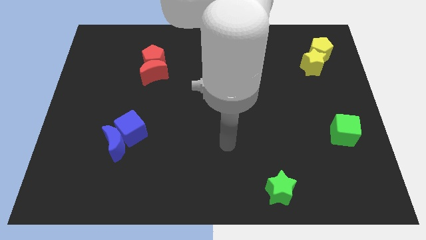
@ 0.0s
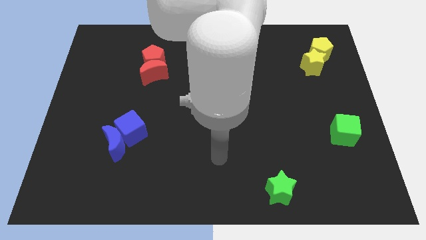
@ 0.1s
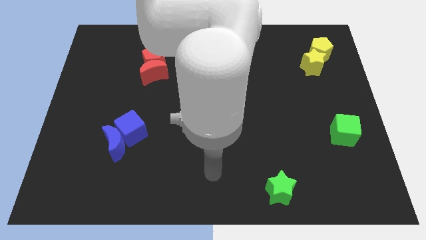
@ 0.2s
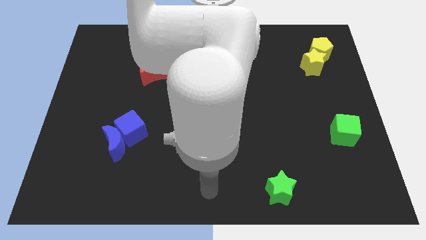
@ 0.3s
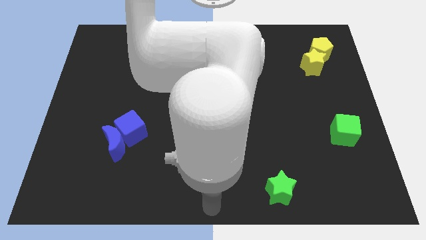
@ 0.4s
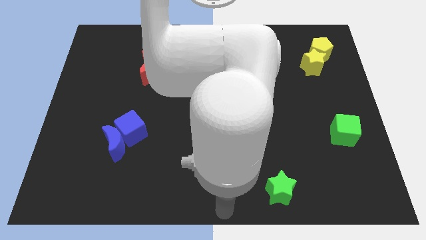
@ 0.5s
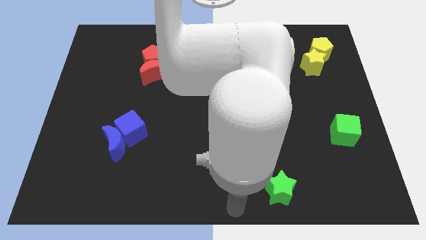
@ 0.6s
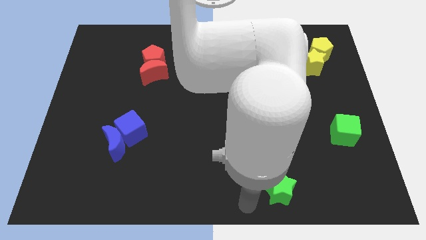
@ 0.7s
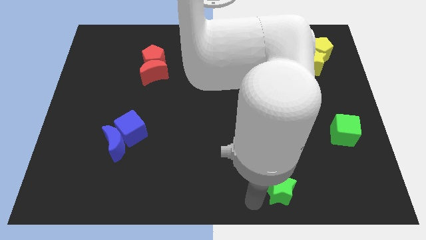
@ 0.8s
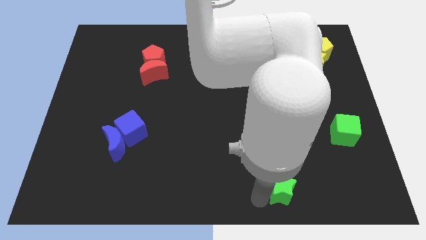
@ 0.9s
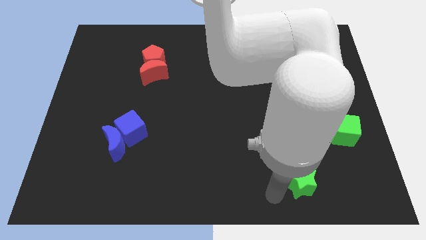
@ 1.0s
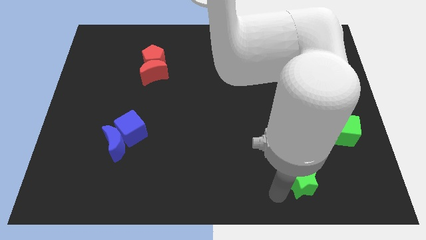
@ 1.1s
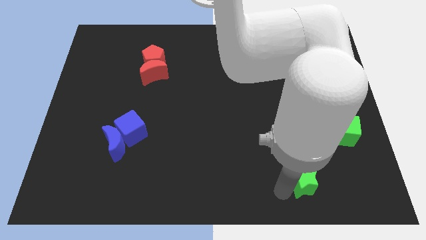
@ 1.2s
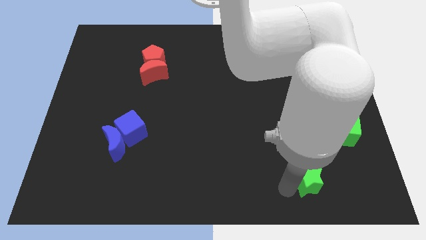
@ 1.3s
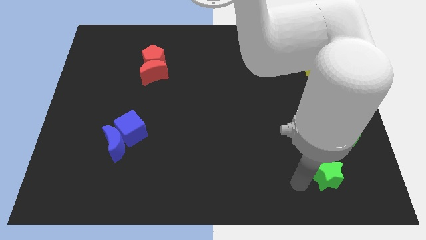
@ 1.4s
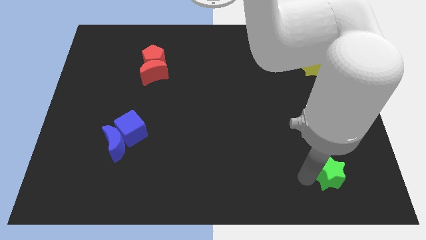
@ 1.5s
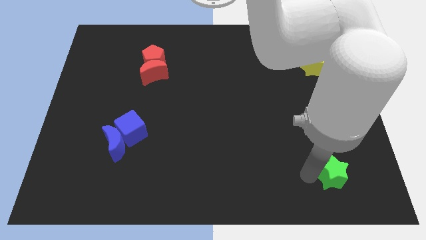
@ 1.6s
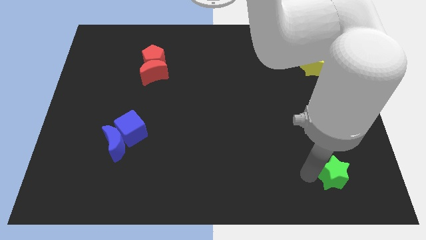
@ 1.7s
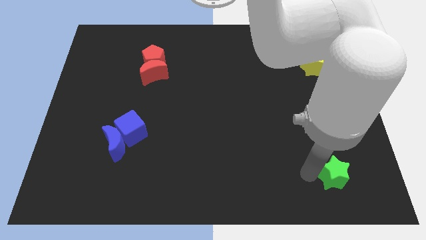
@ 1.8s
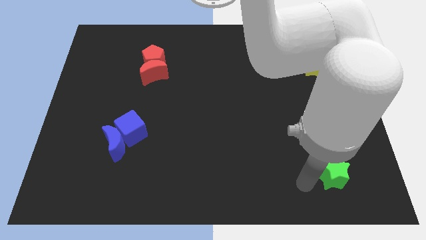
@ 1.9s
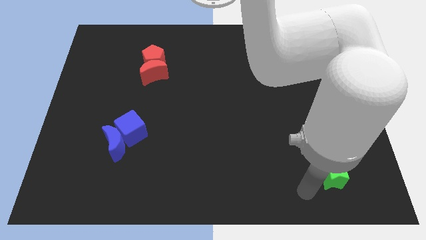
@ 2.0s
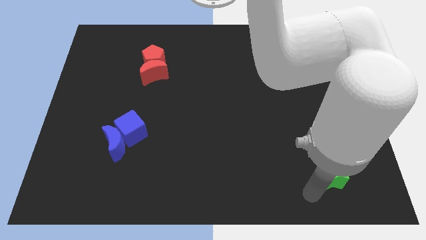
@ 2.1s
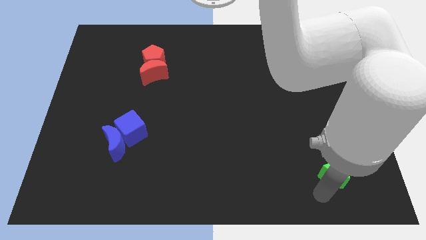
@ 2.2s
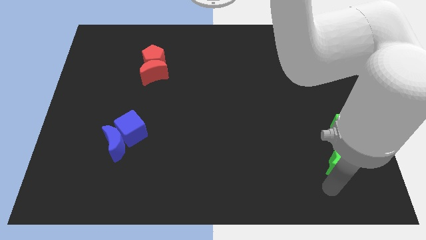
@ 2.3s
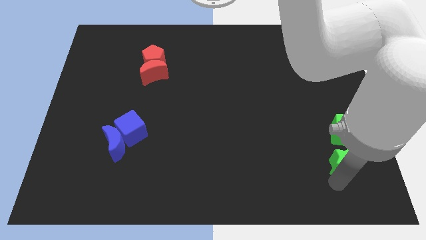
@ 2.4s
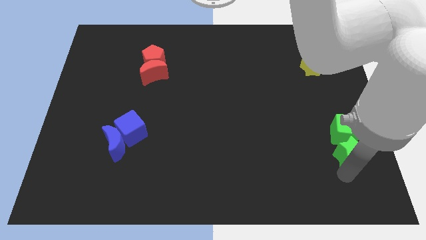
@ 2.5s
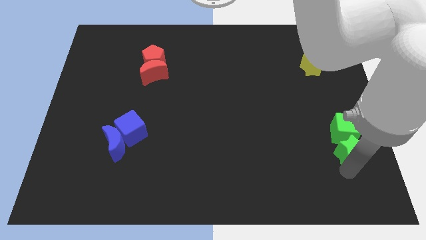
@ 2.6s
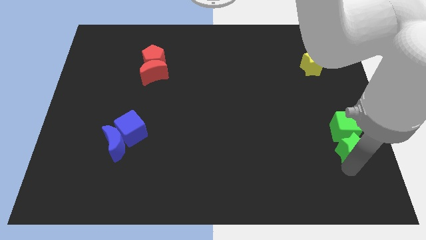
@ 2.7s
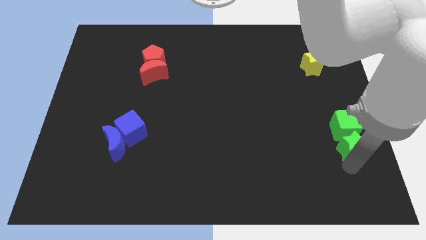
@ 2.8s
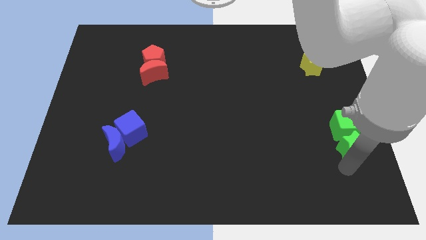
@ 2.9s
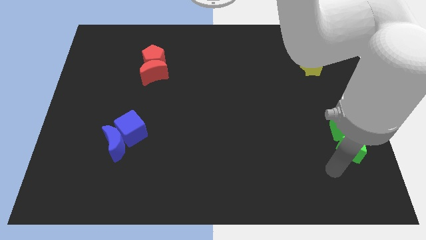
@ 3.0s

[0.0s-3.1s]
push the green star vertically below the green cube

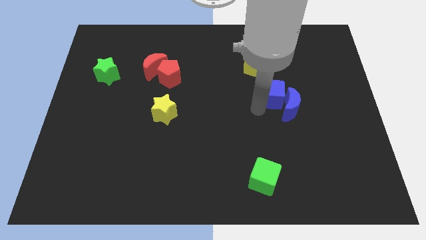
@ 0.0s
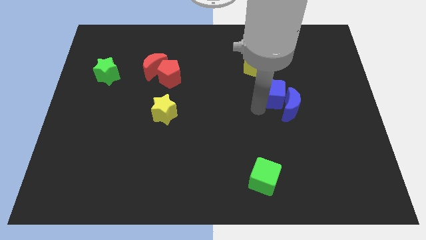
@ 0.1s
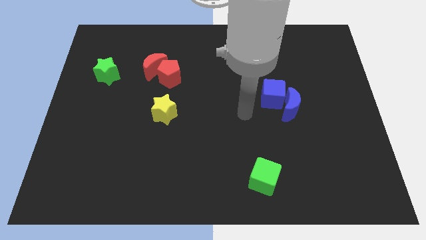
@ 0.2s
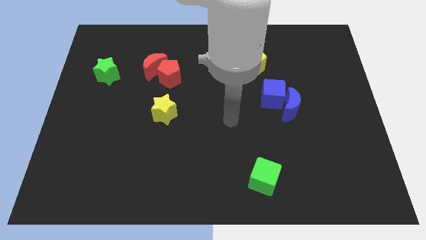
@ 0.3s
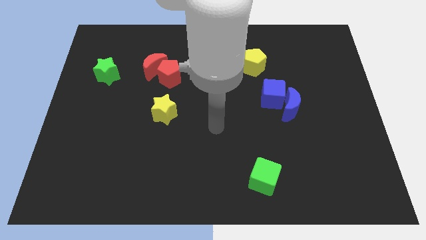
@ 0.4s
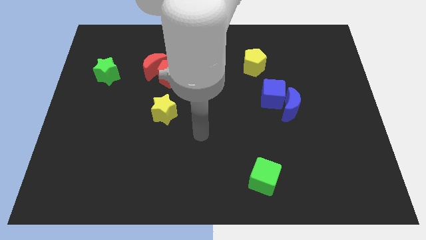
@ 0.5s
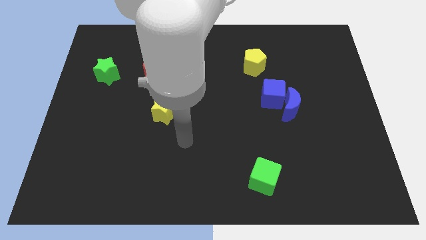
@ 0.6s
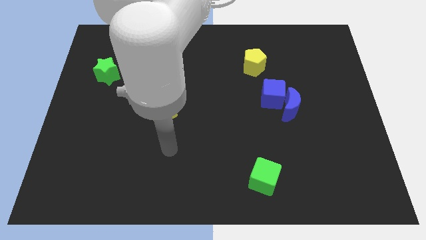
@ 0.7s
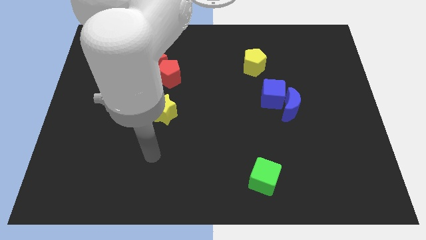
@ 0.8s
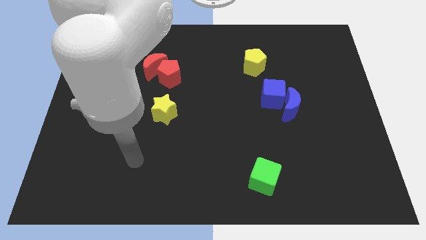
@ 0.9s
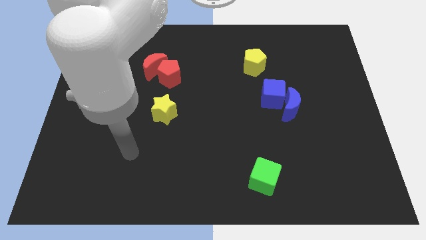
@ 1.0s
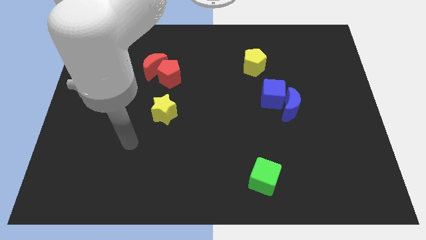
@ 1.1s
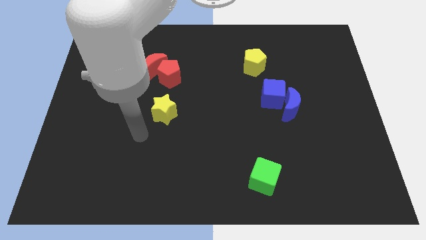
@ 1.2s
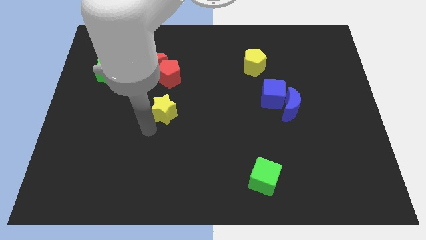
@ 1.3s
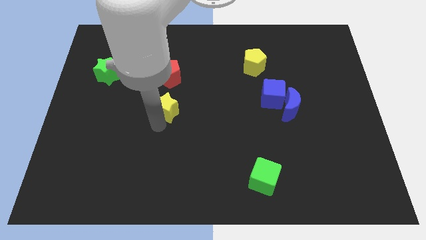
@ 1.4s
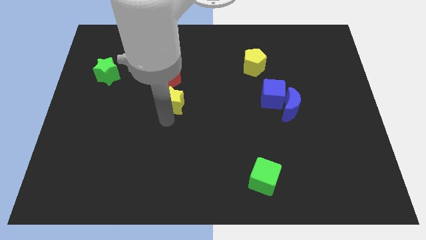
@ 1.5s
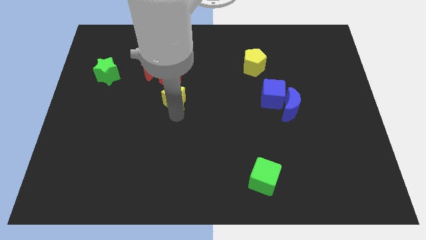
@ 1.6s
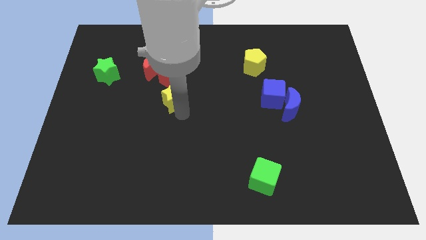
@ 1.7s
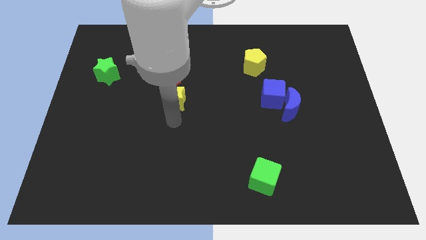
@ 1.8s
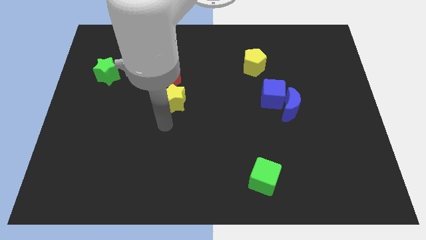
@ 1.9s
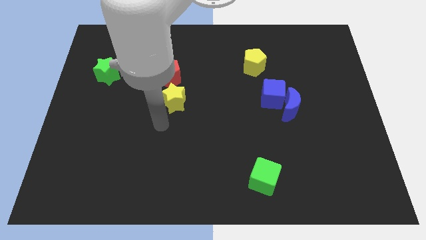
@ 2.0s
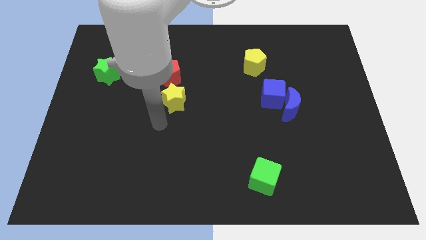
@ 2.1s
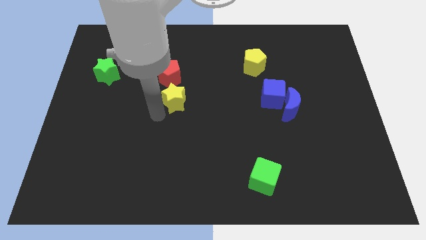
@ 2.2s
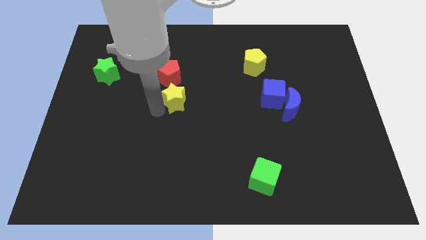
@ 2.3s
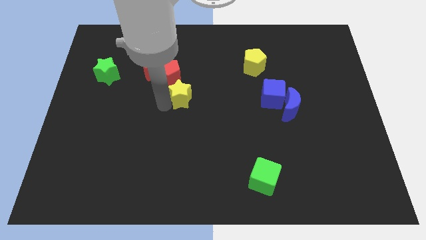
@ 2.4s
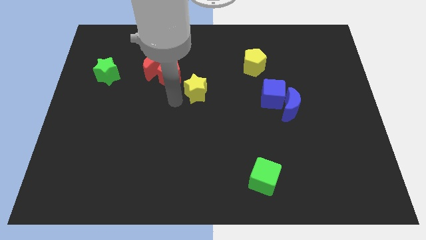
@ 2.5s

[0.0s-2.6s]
move the arm away from the blue cube

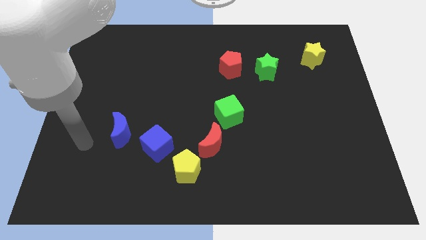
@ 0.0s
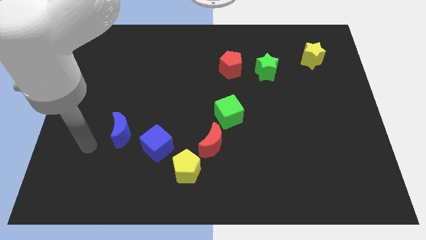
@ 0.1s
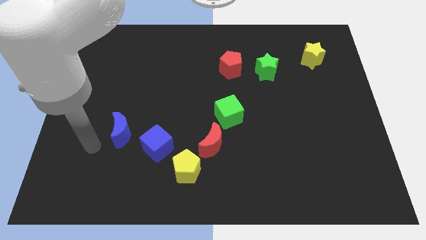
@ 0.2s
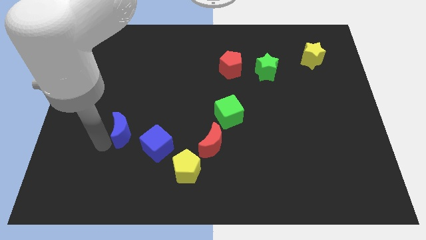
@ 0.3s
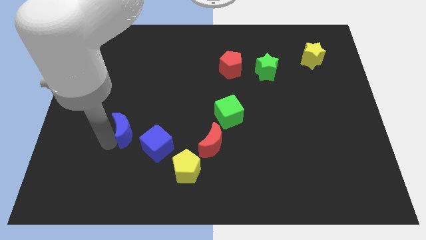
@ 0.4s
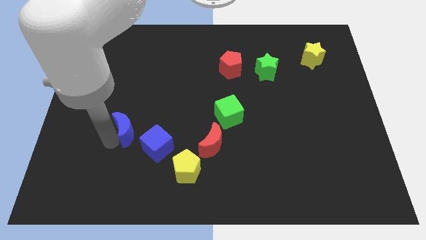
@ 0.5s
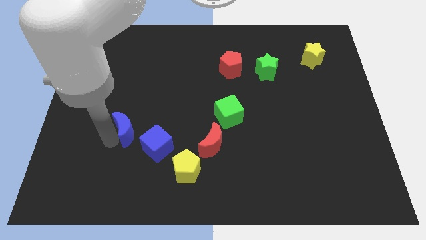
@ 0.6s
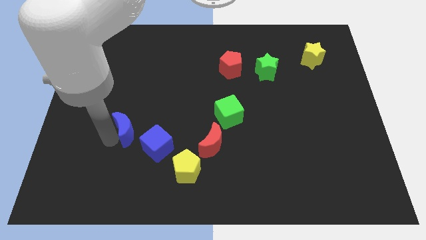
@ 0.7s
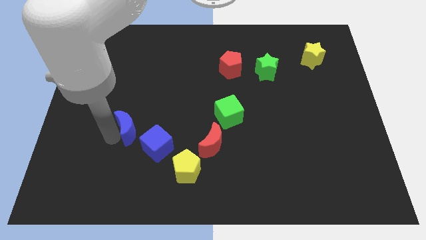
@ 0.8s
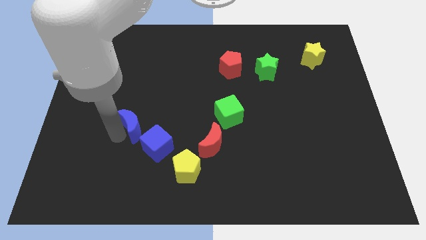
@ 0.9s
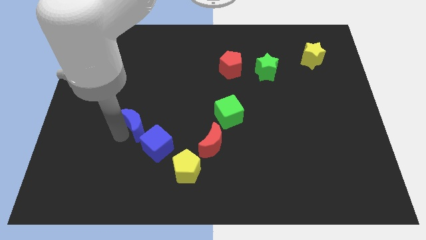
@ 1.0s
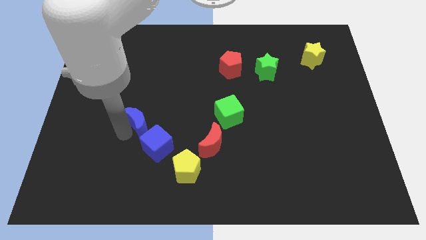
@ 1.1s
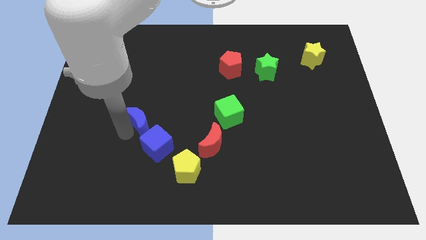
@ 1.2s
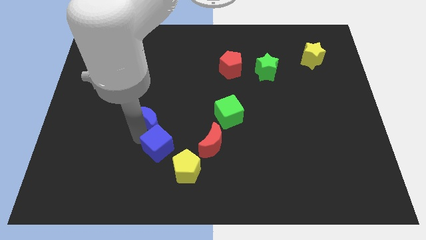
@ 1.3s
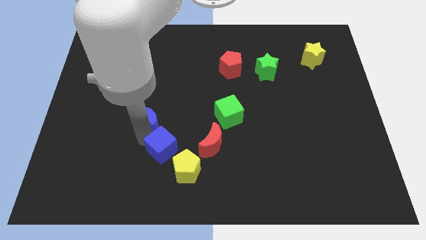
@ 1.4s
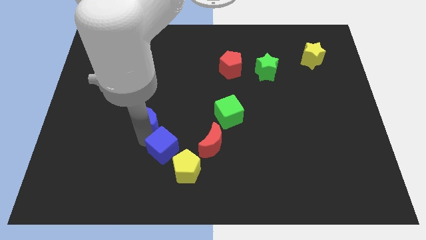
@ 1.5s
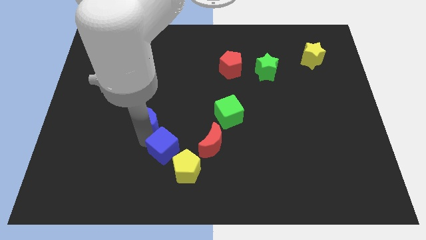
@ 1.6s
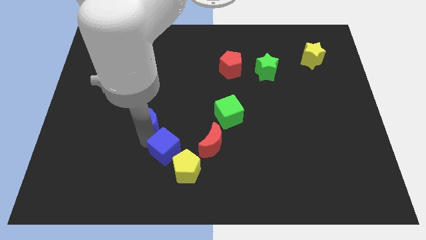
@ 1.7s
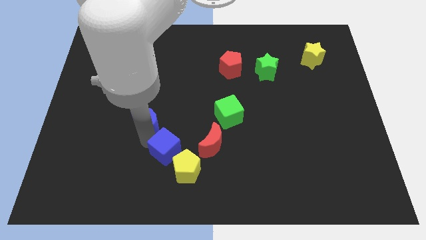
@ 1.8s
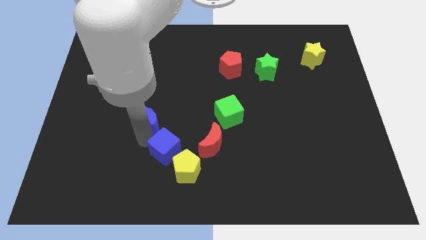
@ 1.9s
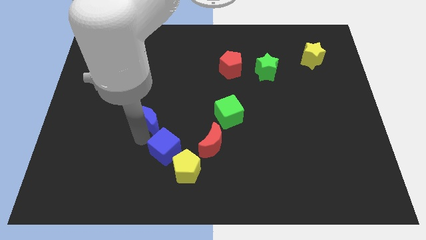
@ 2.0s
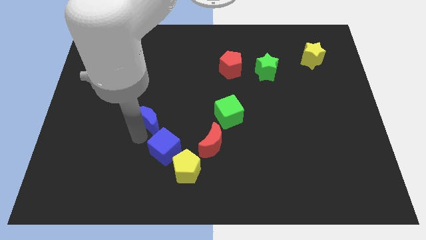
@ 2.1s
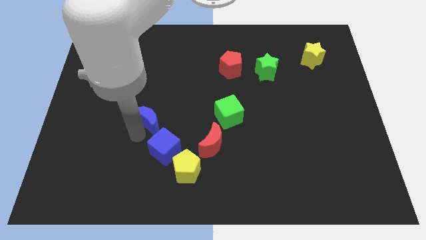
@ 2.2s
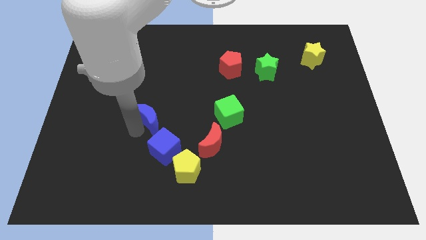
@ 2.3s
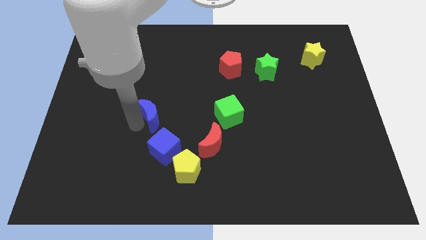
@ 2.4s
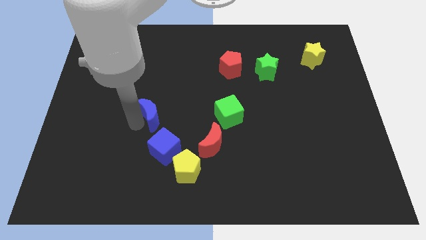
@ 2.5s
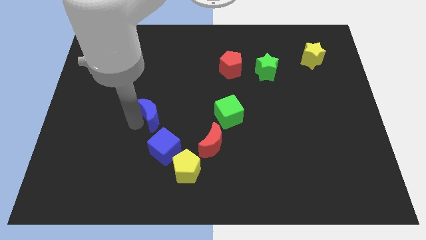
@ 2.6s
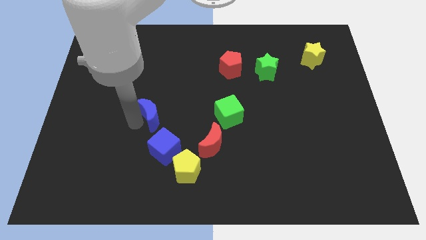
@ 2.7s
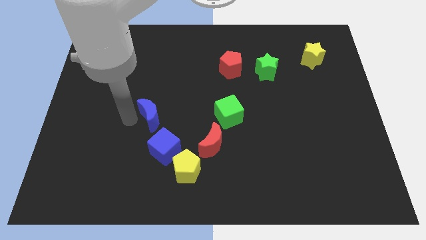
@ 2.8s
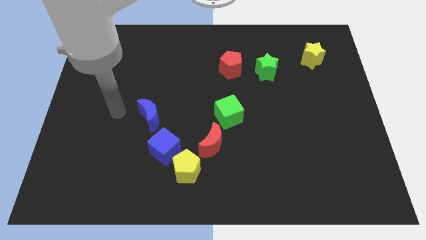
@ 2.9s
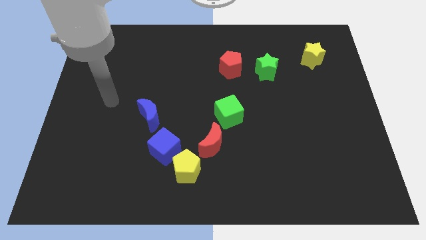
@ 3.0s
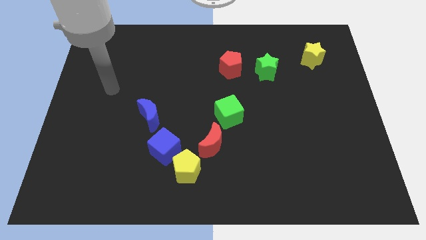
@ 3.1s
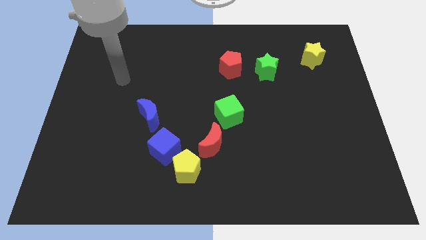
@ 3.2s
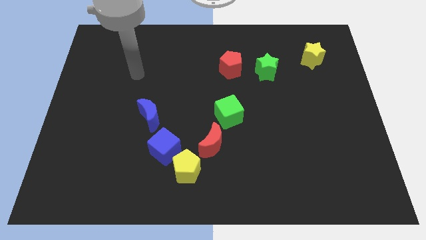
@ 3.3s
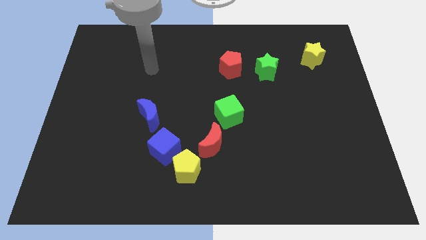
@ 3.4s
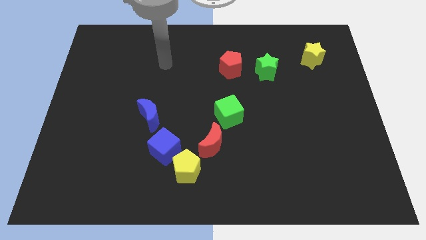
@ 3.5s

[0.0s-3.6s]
place the blue moon diagonally to the blue cube
